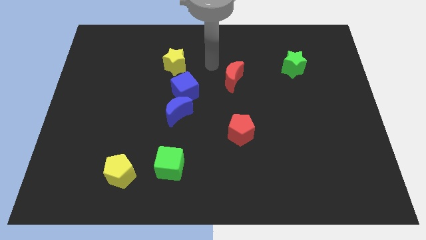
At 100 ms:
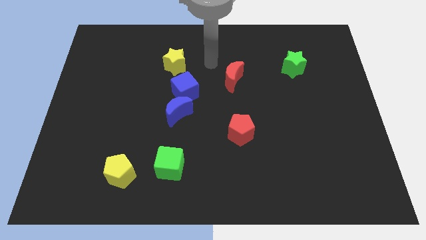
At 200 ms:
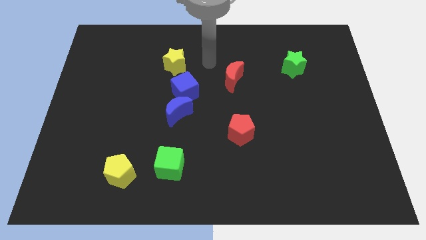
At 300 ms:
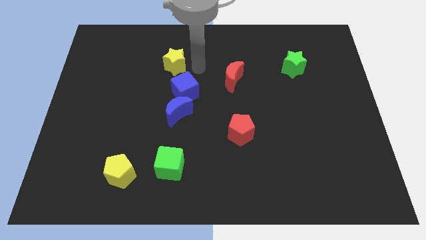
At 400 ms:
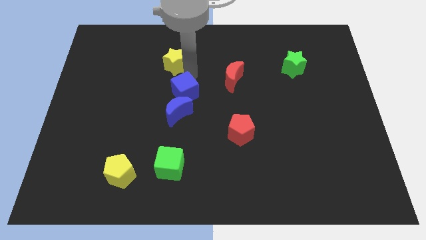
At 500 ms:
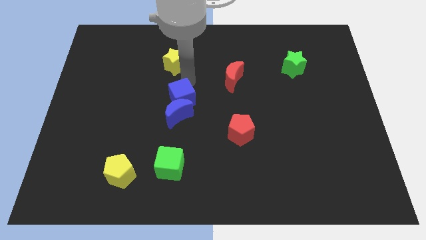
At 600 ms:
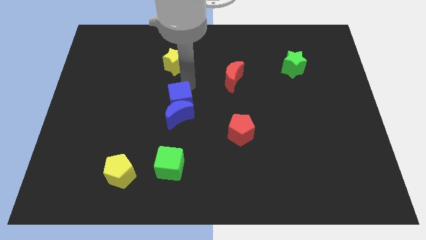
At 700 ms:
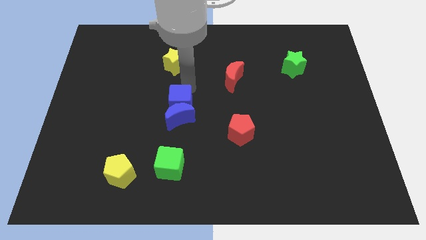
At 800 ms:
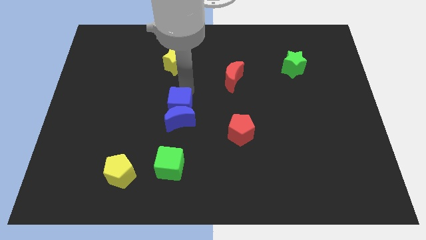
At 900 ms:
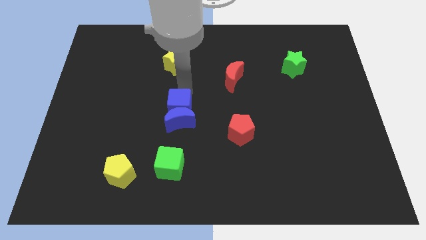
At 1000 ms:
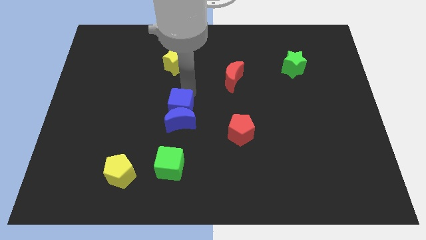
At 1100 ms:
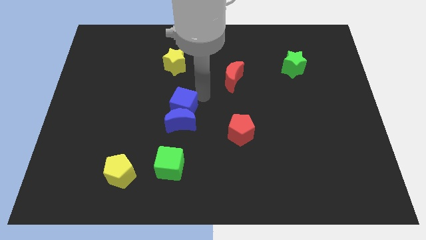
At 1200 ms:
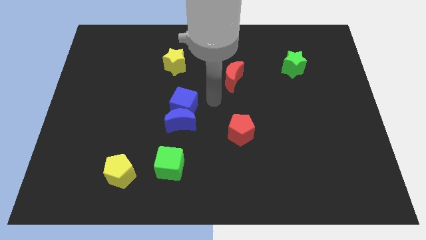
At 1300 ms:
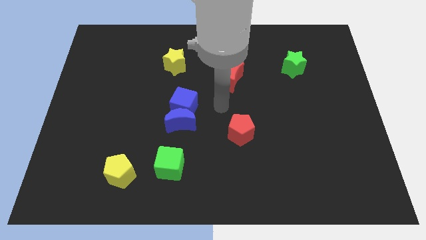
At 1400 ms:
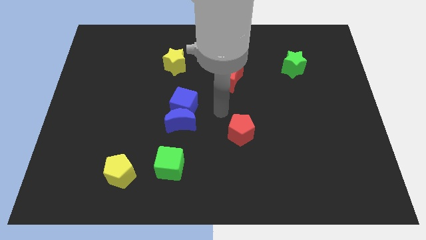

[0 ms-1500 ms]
push the blue cube into the blue moon

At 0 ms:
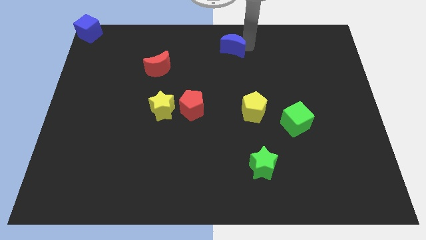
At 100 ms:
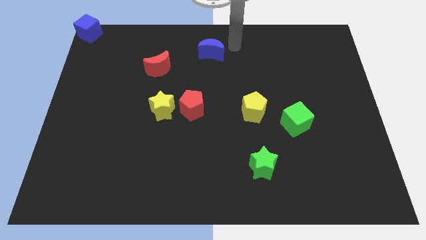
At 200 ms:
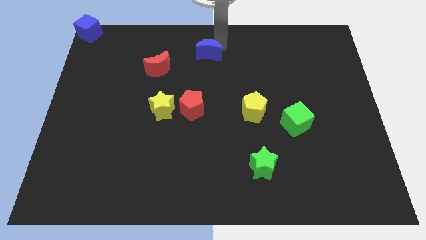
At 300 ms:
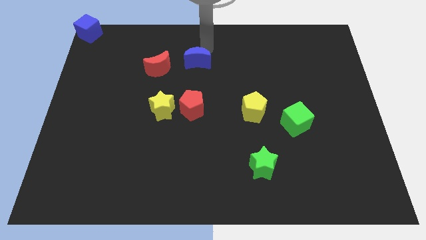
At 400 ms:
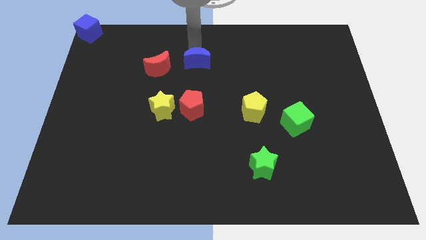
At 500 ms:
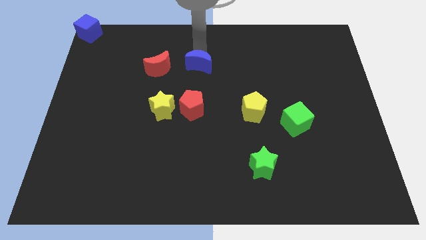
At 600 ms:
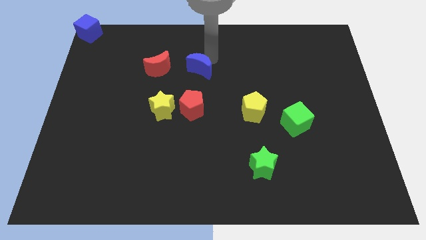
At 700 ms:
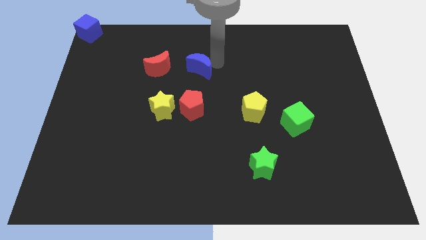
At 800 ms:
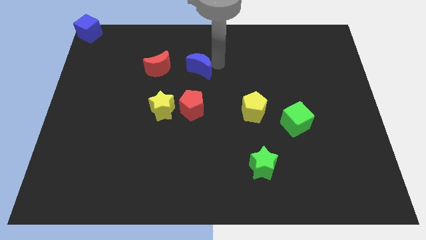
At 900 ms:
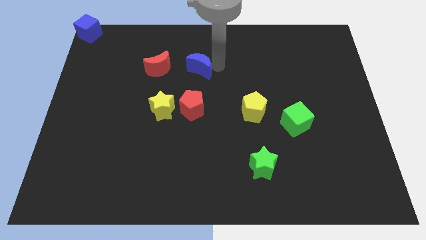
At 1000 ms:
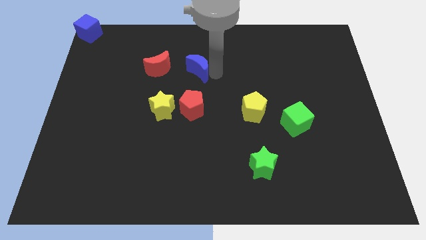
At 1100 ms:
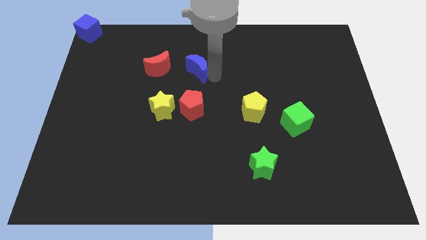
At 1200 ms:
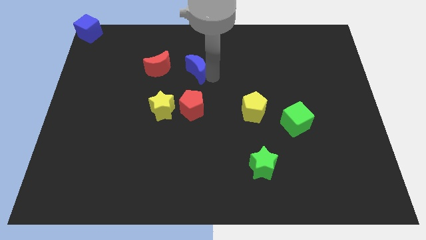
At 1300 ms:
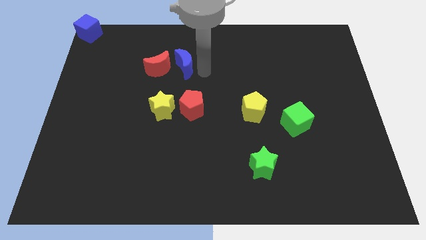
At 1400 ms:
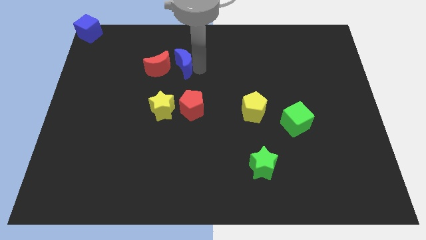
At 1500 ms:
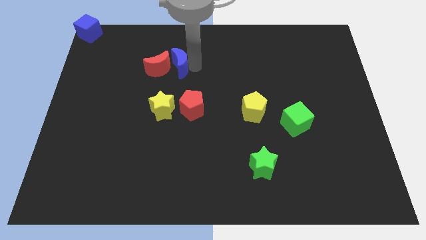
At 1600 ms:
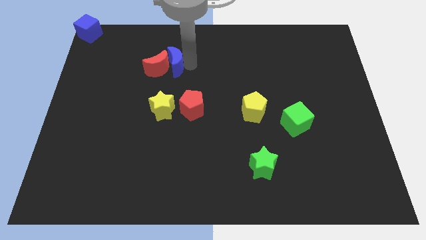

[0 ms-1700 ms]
arrange the blue crescent at the right side of the red moon

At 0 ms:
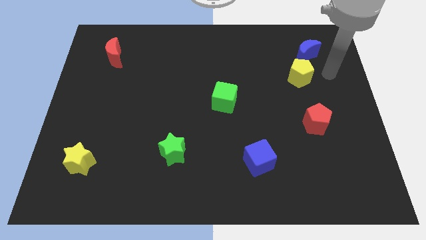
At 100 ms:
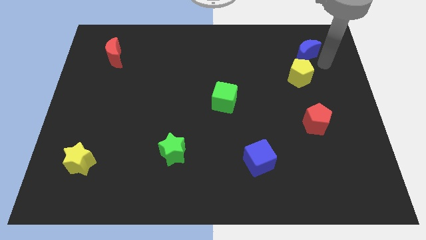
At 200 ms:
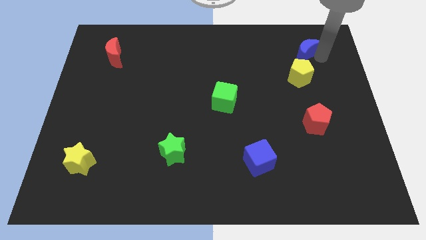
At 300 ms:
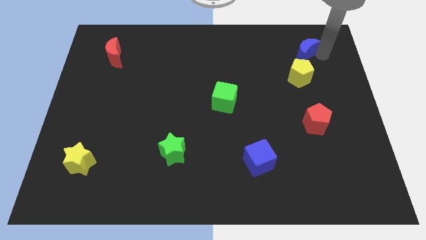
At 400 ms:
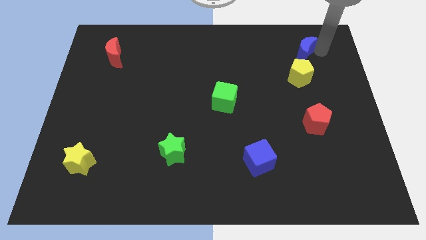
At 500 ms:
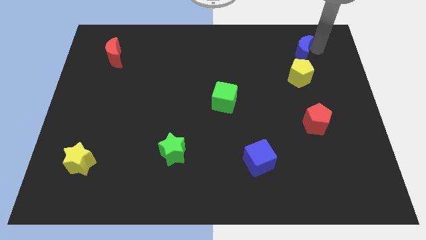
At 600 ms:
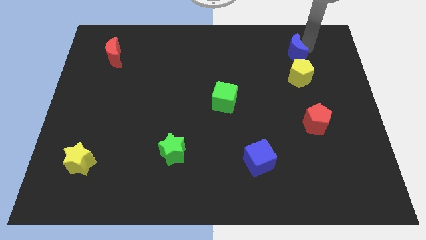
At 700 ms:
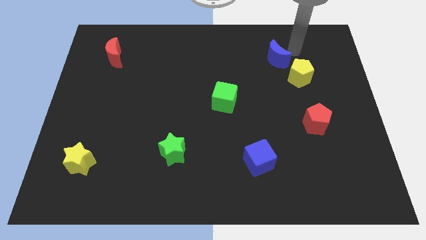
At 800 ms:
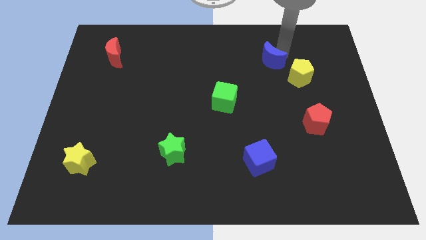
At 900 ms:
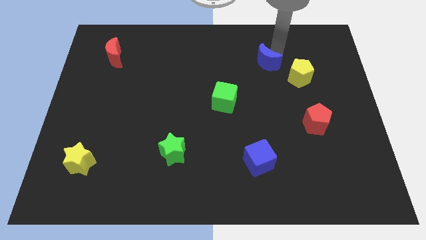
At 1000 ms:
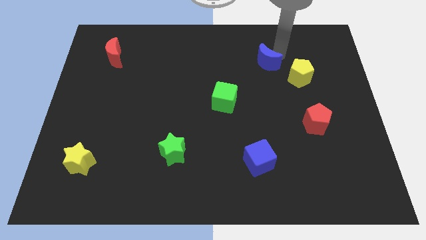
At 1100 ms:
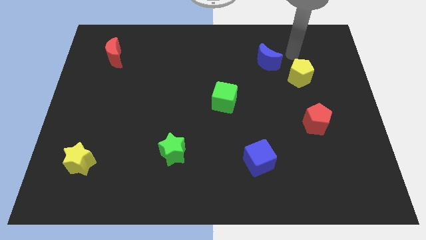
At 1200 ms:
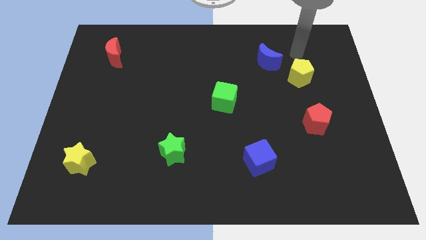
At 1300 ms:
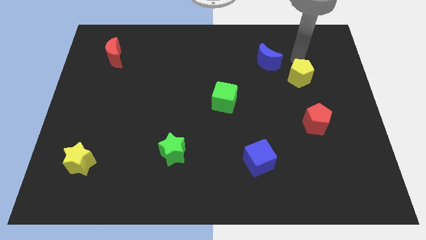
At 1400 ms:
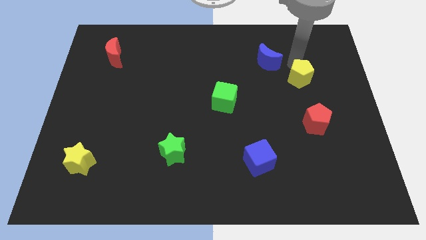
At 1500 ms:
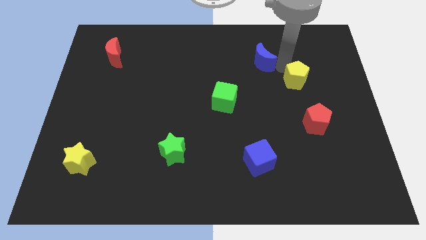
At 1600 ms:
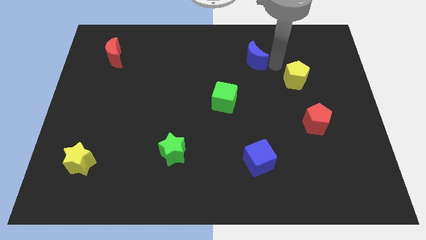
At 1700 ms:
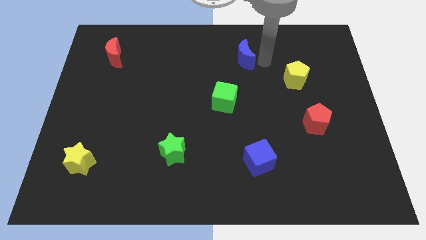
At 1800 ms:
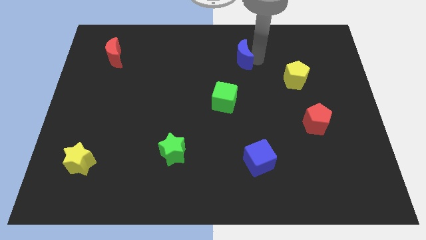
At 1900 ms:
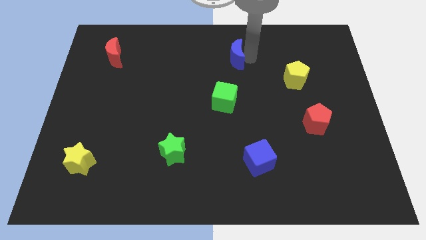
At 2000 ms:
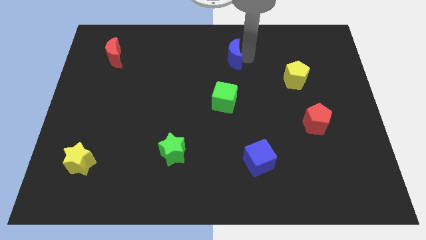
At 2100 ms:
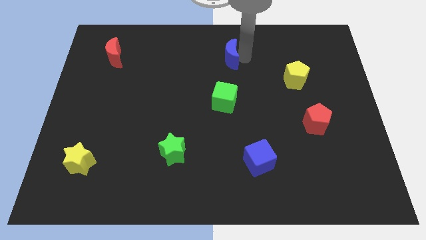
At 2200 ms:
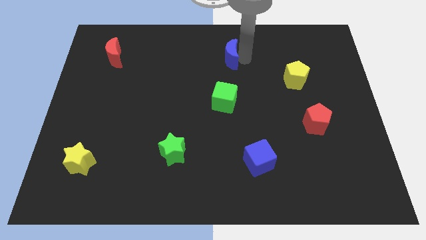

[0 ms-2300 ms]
move blue moon to the center of the board

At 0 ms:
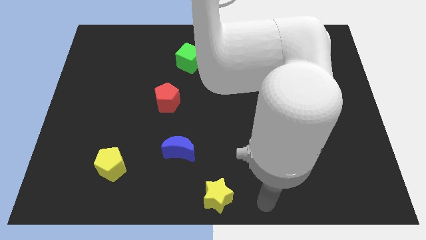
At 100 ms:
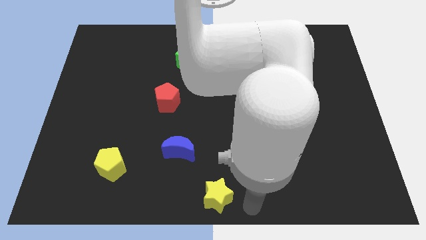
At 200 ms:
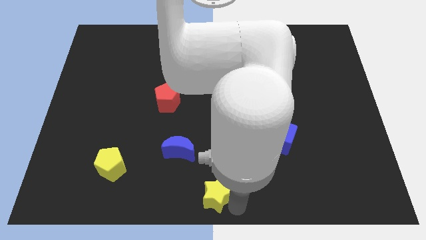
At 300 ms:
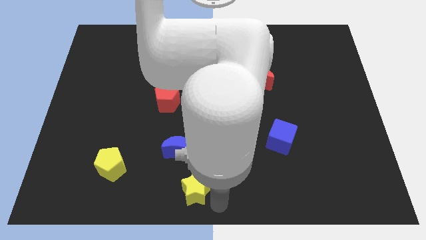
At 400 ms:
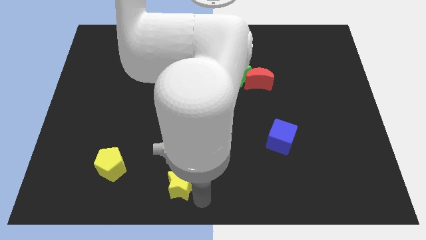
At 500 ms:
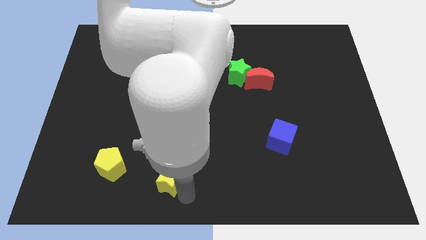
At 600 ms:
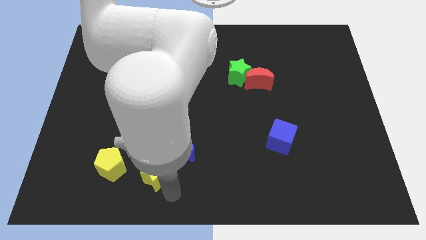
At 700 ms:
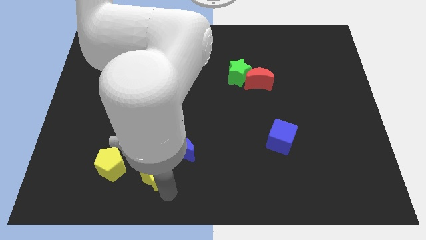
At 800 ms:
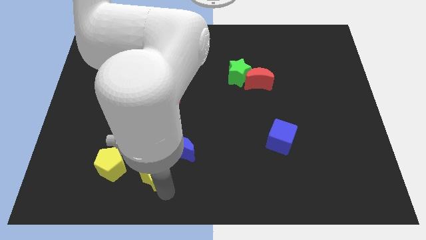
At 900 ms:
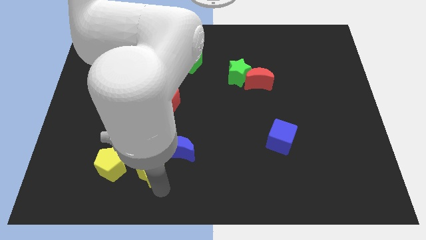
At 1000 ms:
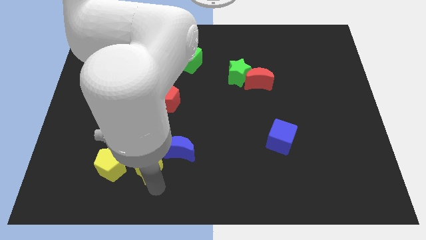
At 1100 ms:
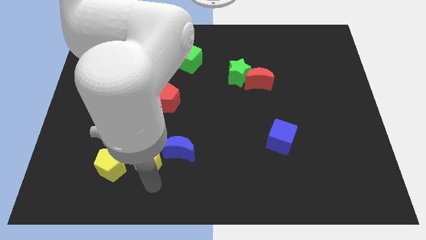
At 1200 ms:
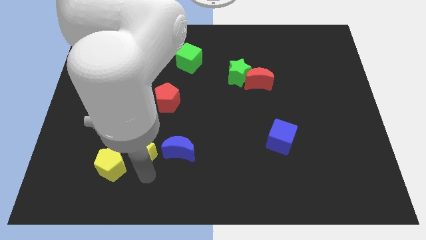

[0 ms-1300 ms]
place the yellow star in between yellow pentagon and blue moon

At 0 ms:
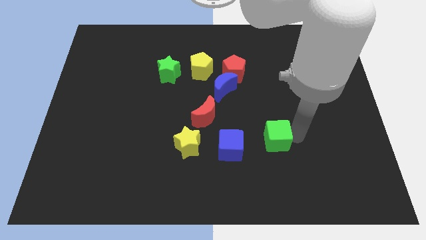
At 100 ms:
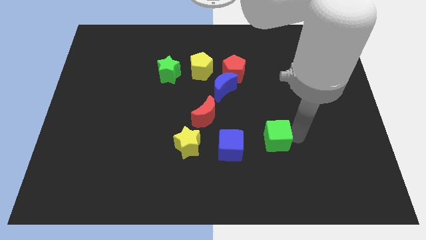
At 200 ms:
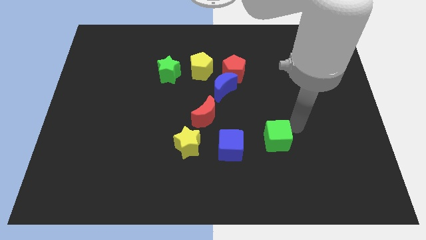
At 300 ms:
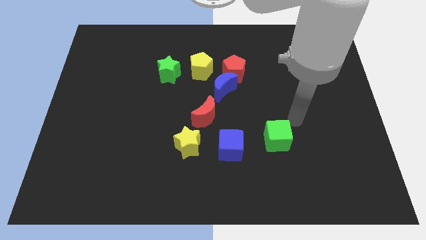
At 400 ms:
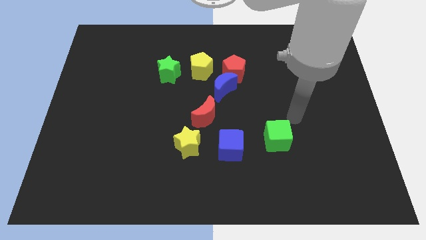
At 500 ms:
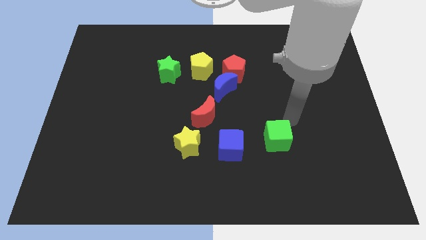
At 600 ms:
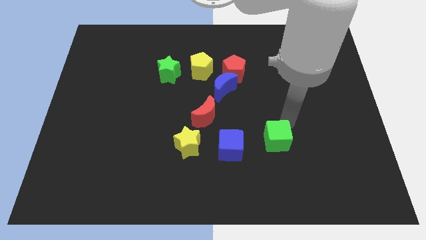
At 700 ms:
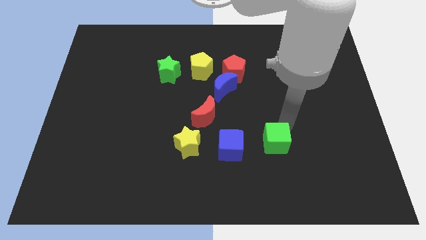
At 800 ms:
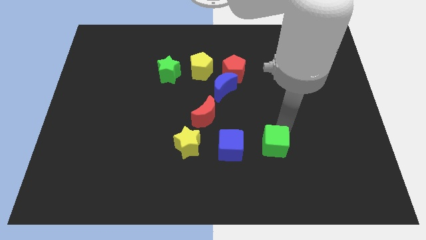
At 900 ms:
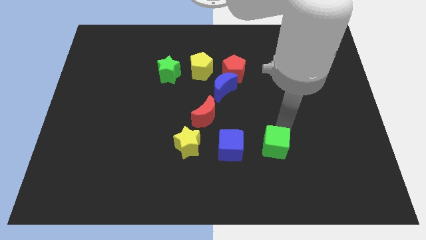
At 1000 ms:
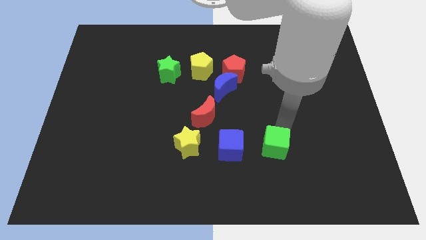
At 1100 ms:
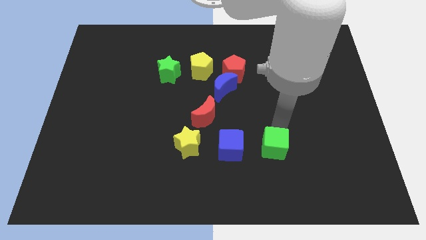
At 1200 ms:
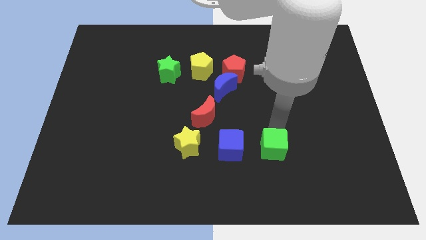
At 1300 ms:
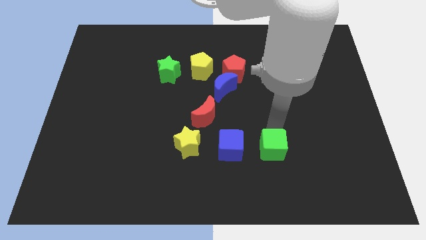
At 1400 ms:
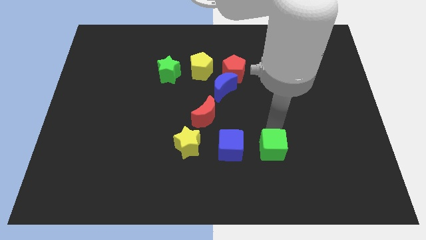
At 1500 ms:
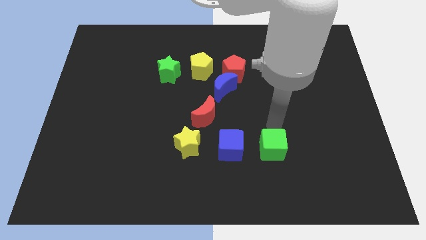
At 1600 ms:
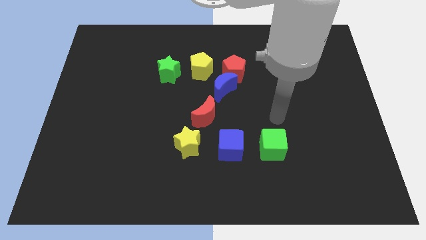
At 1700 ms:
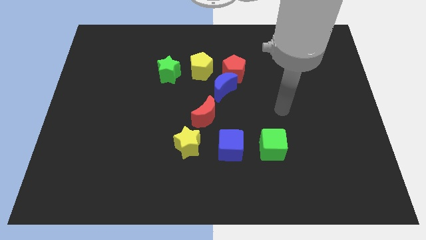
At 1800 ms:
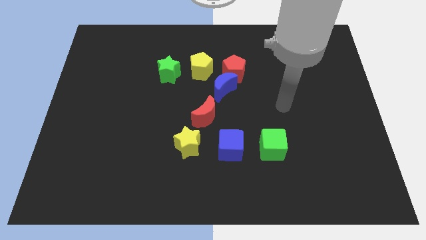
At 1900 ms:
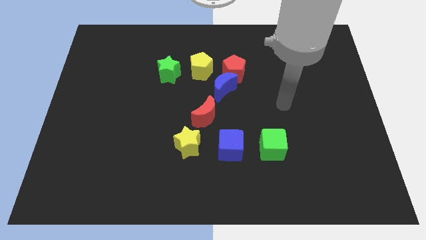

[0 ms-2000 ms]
move the green cube right to the blue cube
